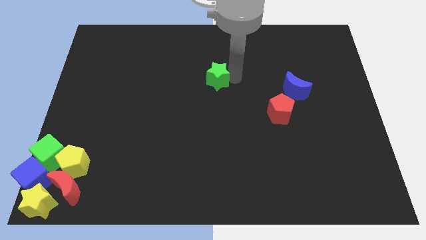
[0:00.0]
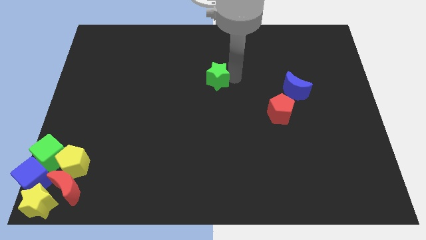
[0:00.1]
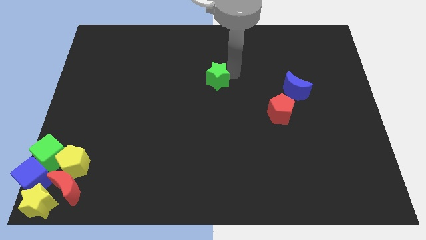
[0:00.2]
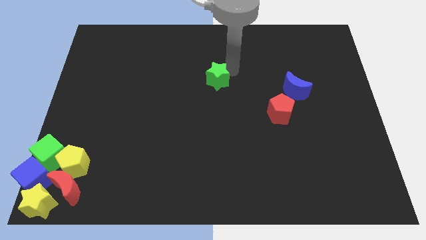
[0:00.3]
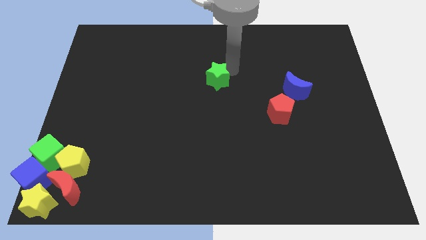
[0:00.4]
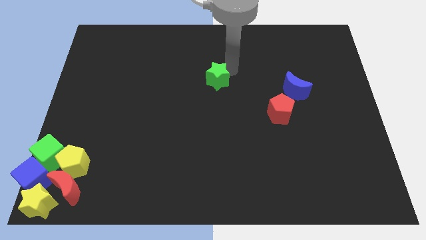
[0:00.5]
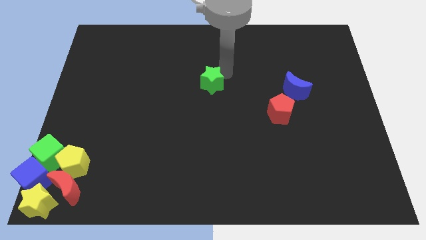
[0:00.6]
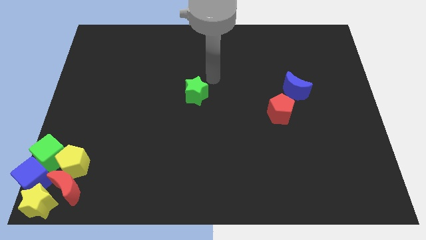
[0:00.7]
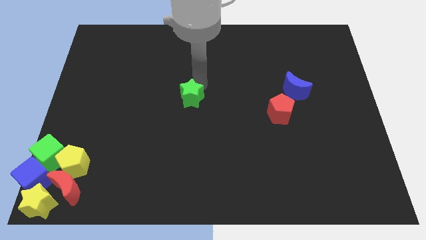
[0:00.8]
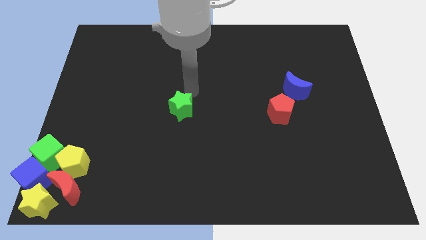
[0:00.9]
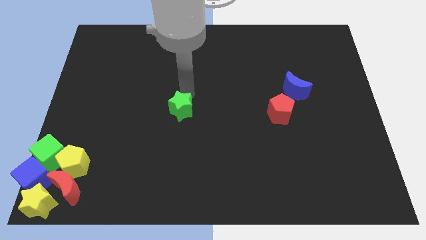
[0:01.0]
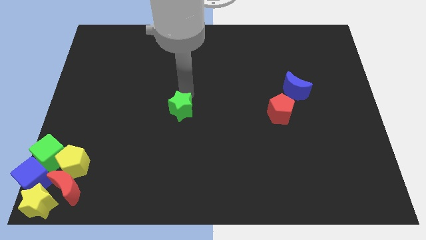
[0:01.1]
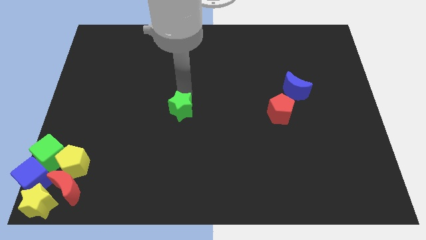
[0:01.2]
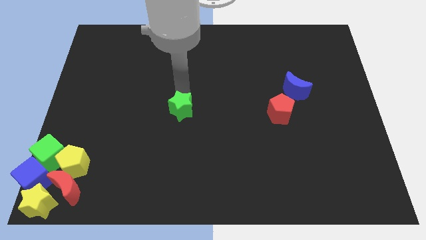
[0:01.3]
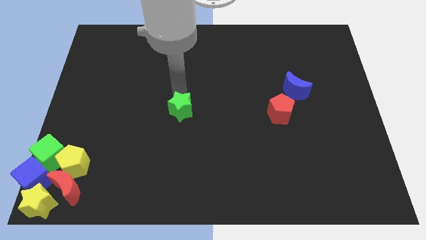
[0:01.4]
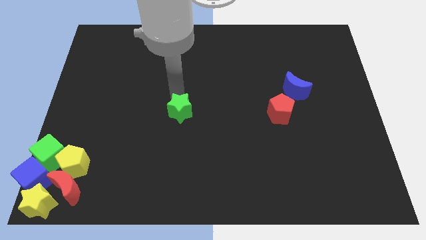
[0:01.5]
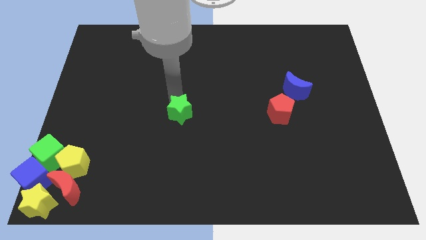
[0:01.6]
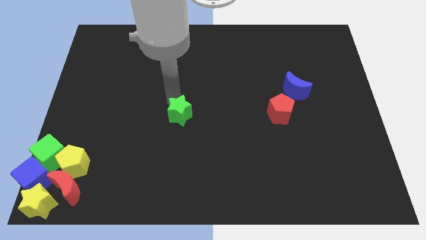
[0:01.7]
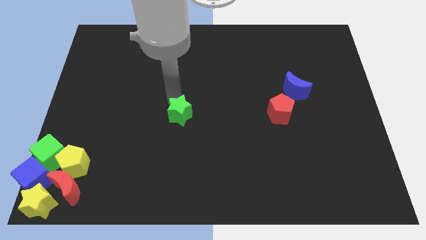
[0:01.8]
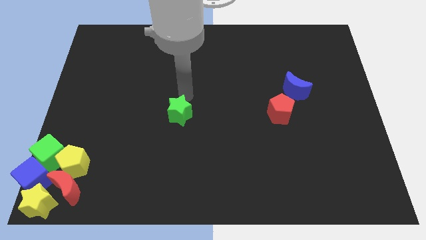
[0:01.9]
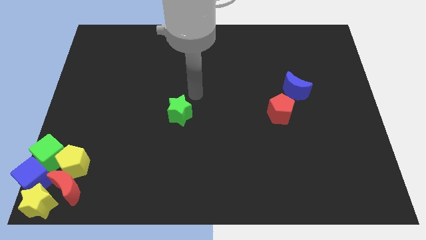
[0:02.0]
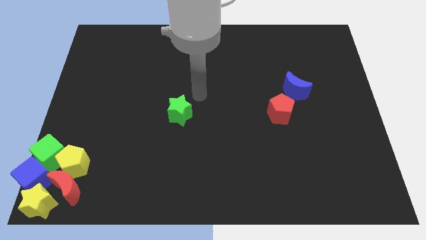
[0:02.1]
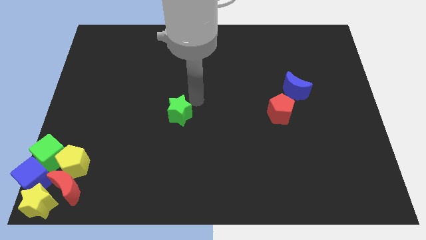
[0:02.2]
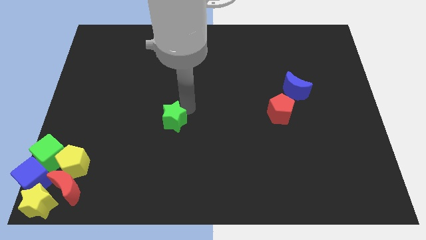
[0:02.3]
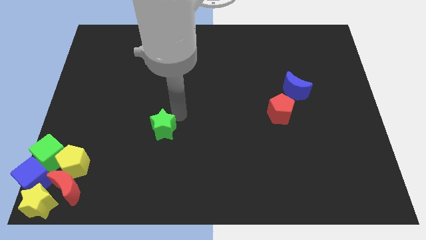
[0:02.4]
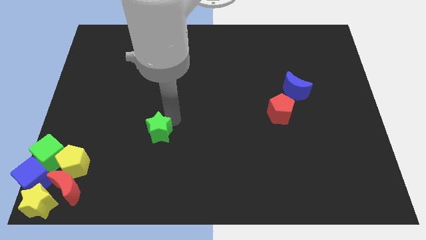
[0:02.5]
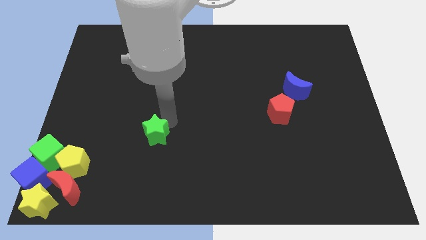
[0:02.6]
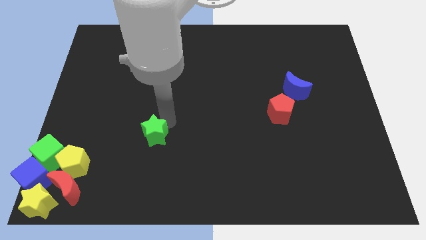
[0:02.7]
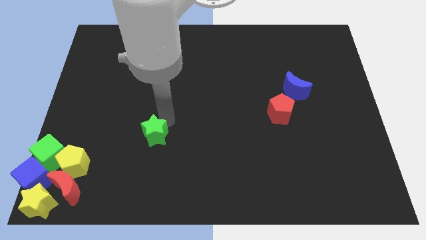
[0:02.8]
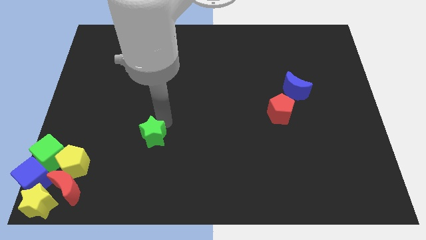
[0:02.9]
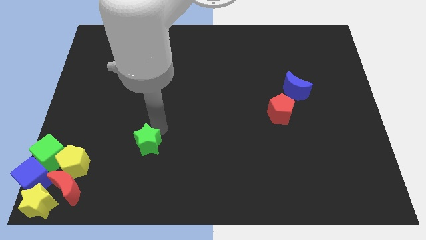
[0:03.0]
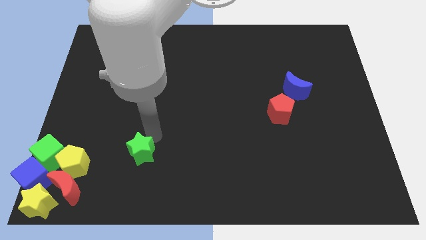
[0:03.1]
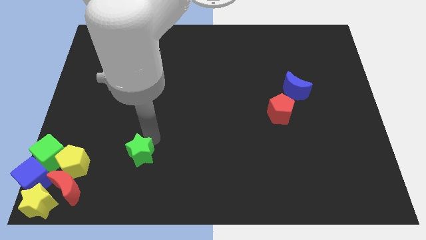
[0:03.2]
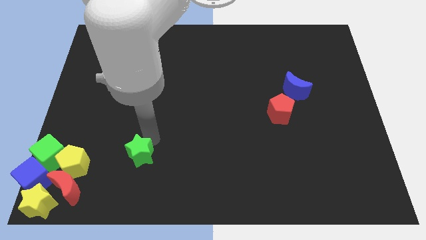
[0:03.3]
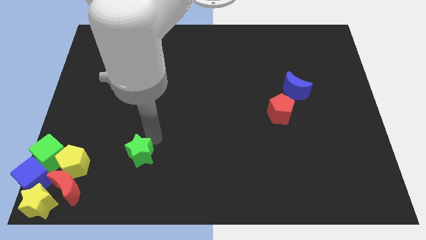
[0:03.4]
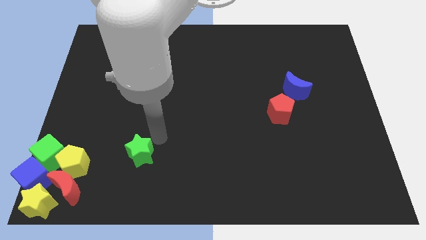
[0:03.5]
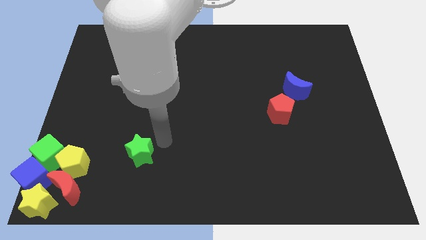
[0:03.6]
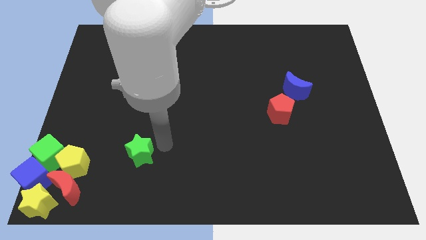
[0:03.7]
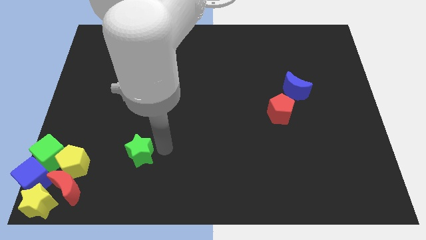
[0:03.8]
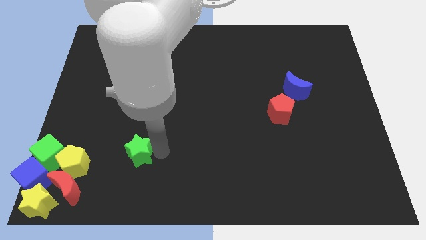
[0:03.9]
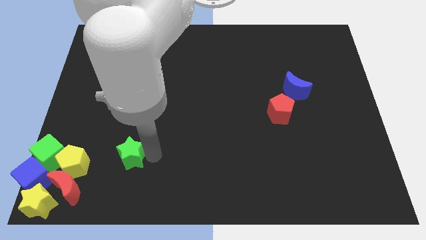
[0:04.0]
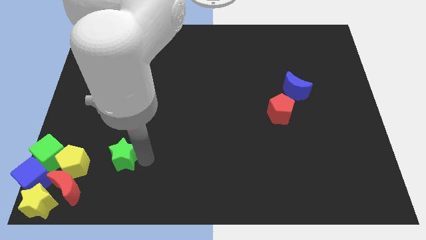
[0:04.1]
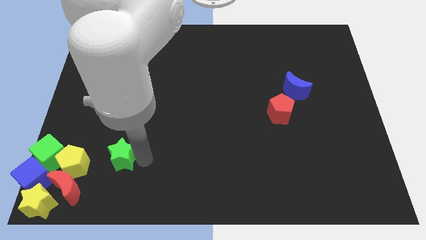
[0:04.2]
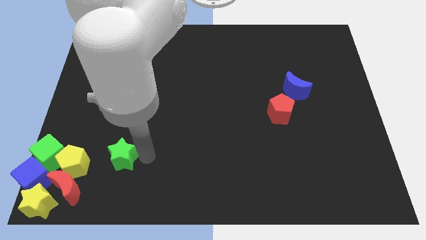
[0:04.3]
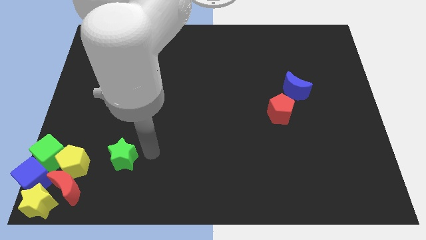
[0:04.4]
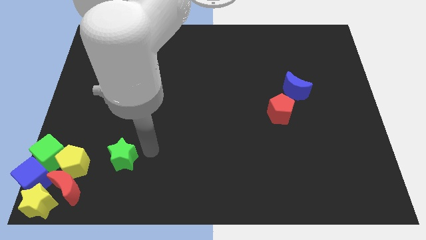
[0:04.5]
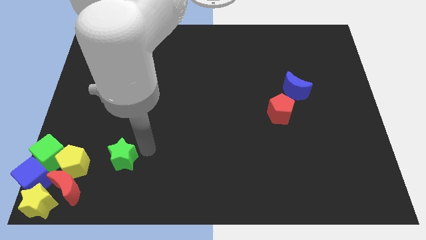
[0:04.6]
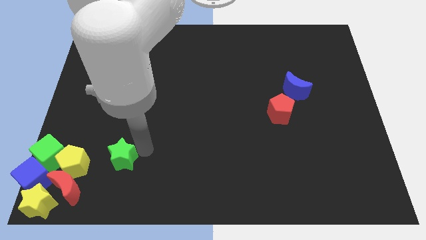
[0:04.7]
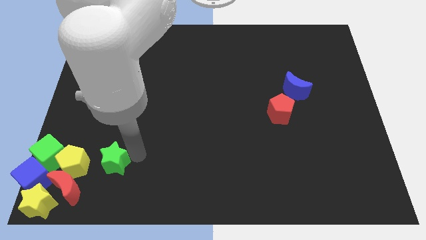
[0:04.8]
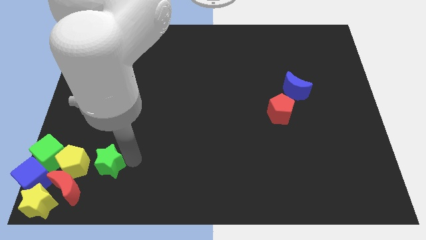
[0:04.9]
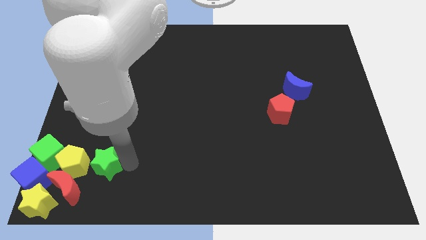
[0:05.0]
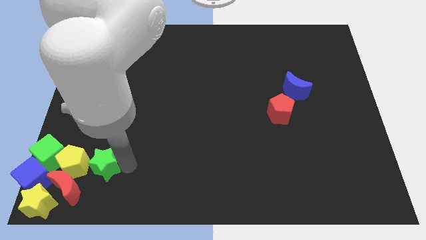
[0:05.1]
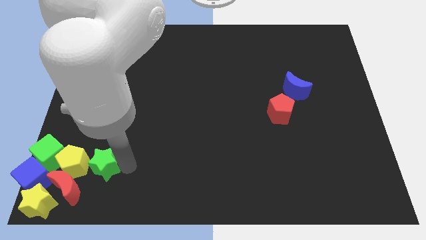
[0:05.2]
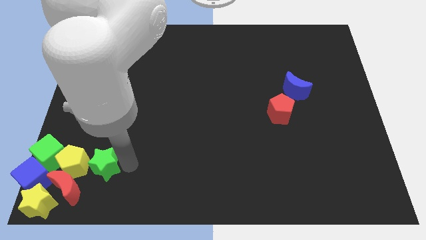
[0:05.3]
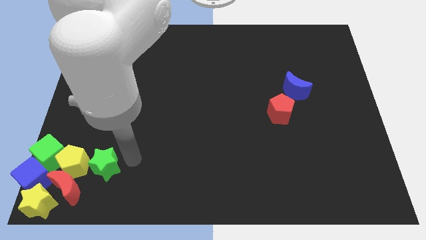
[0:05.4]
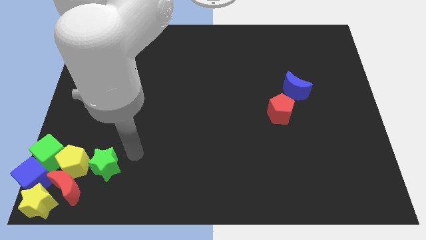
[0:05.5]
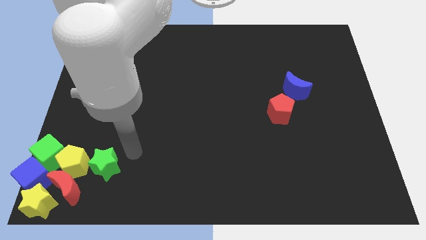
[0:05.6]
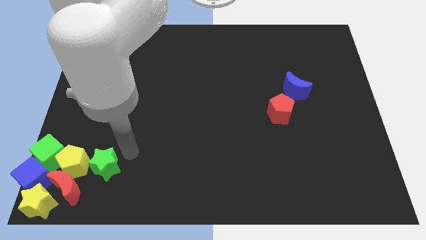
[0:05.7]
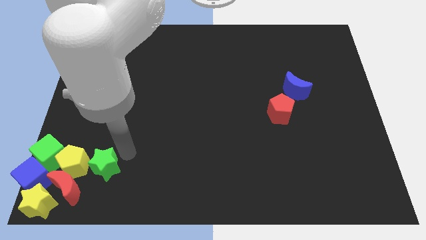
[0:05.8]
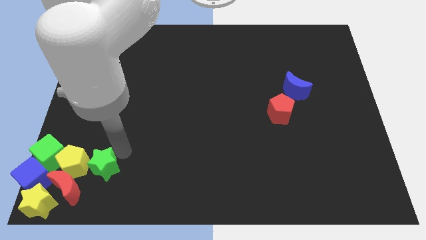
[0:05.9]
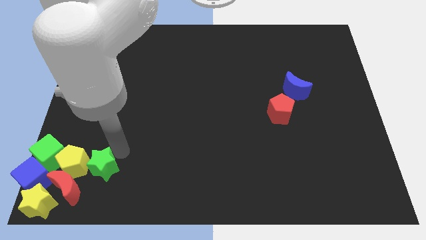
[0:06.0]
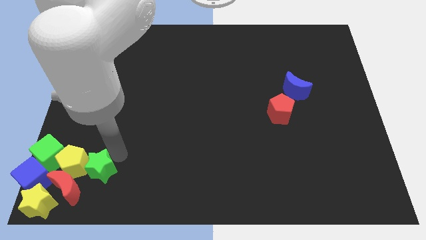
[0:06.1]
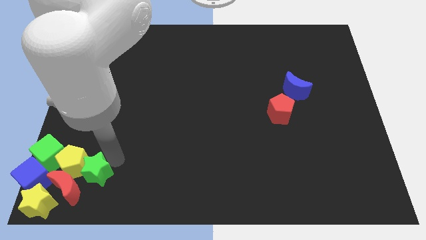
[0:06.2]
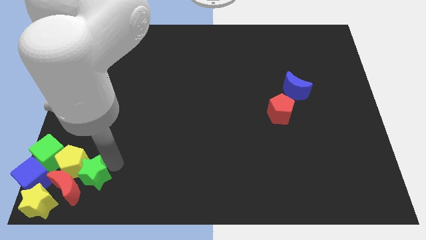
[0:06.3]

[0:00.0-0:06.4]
place the green star right to the yellow pentagon

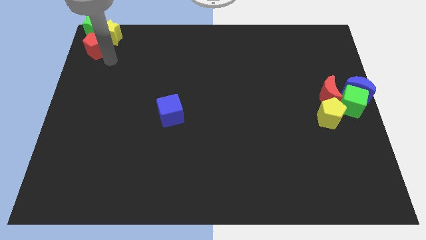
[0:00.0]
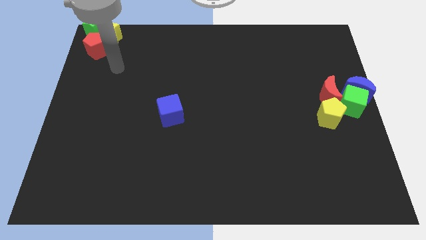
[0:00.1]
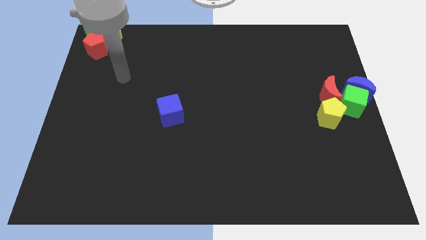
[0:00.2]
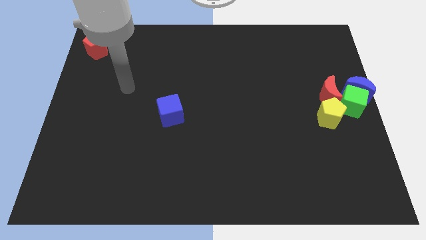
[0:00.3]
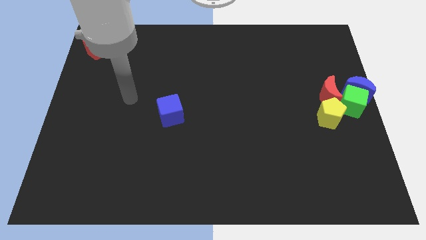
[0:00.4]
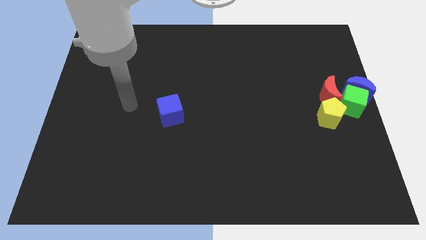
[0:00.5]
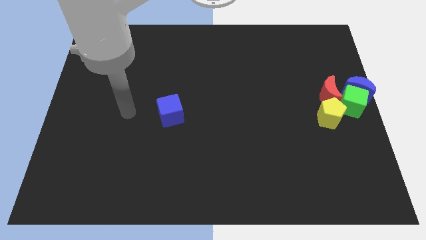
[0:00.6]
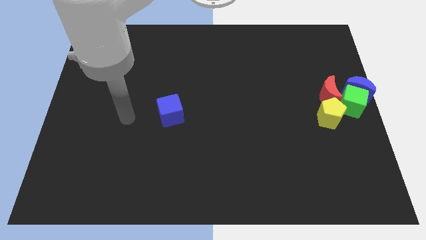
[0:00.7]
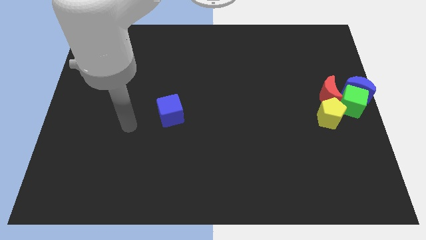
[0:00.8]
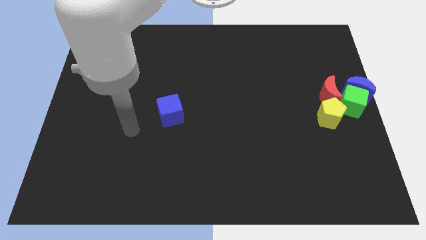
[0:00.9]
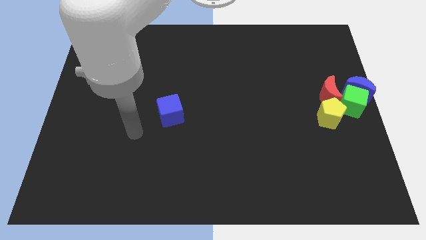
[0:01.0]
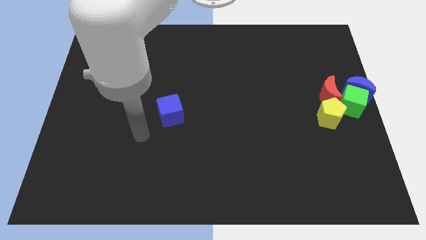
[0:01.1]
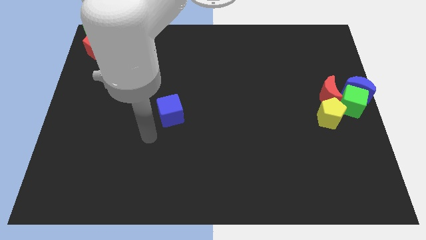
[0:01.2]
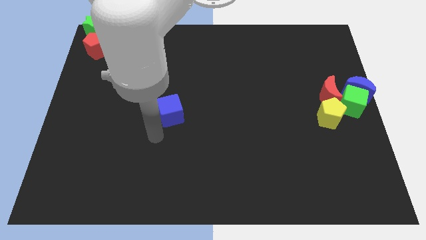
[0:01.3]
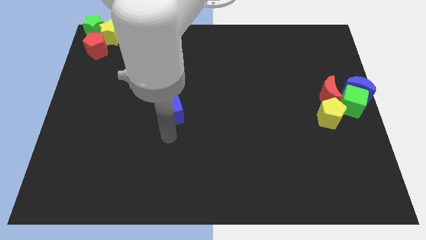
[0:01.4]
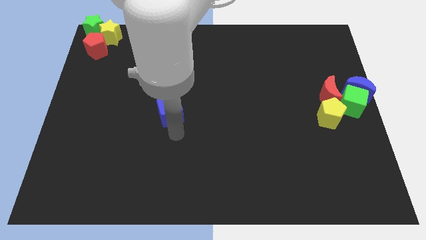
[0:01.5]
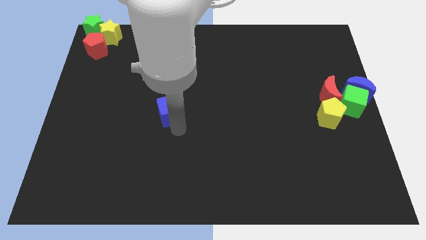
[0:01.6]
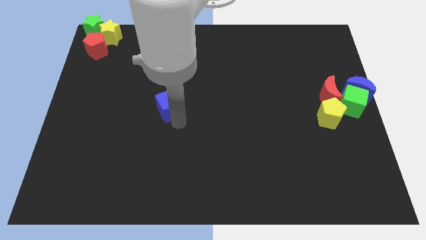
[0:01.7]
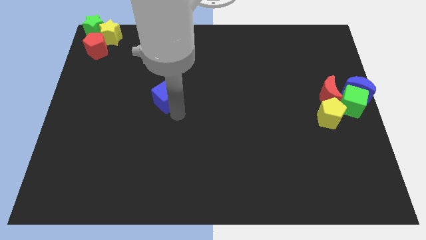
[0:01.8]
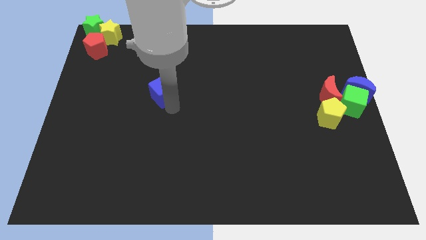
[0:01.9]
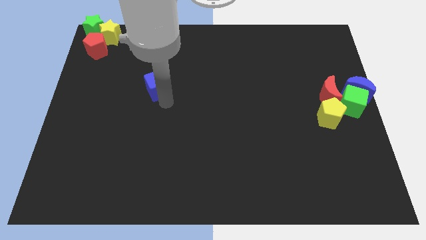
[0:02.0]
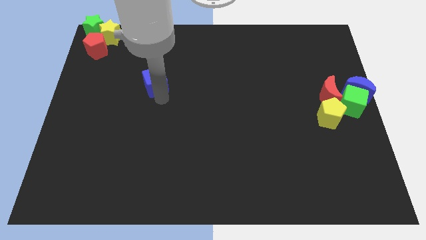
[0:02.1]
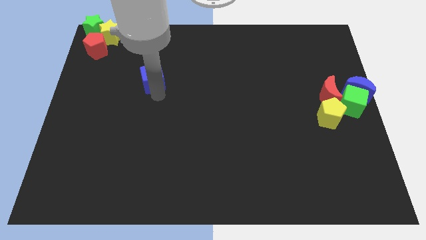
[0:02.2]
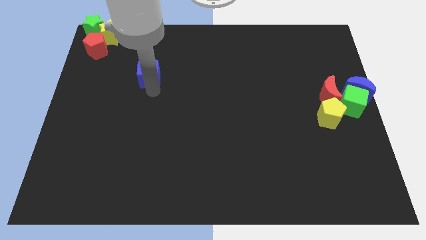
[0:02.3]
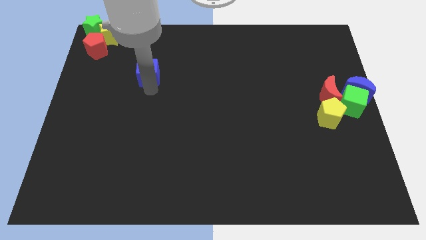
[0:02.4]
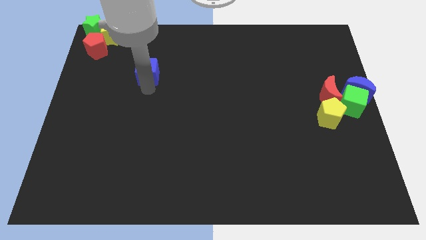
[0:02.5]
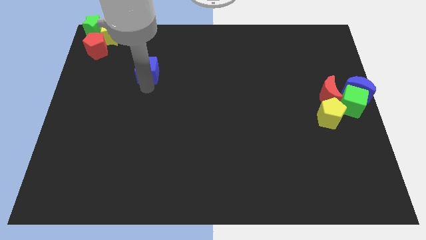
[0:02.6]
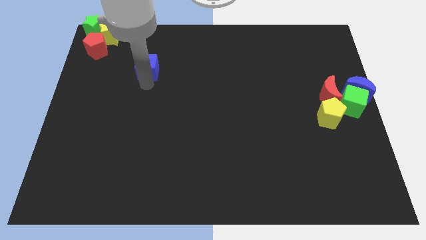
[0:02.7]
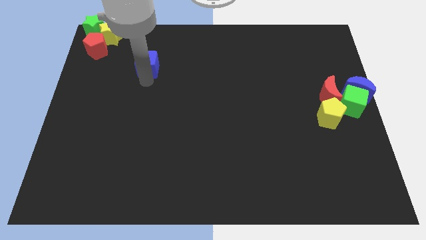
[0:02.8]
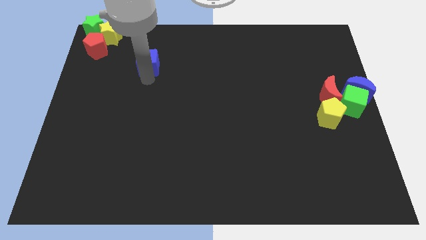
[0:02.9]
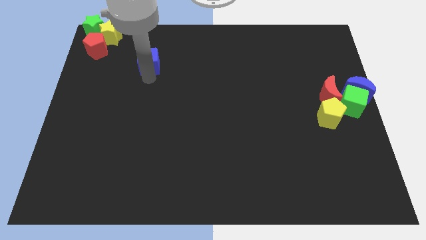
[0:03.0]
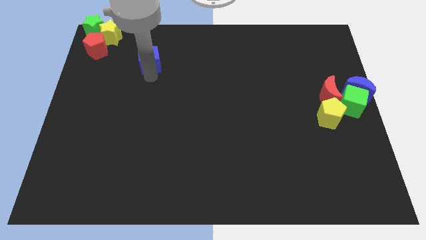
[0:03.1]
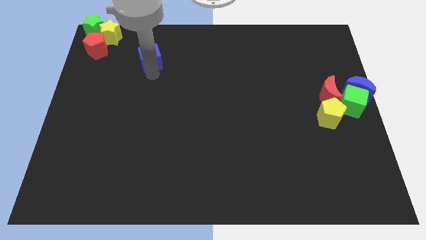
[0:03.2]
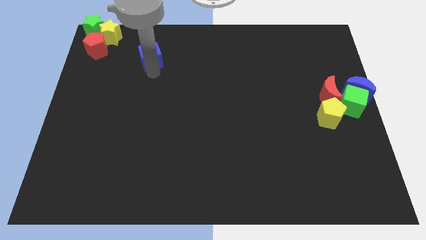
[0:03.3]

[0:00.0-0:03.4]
move the blue cube slightly towards the top left
